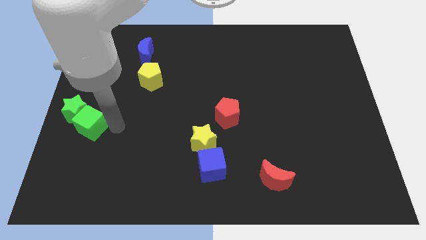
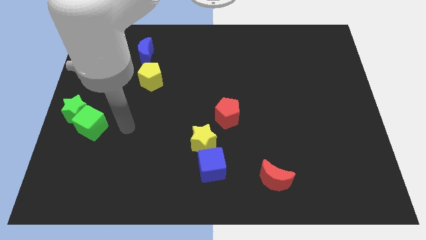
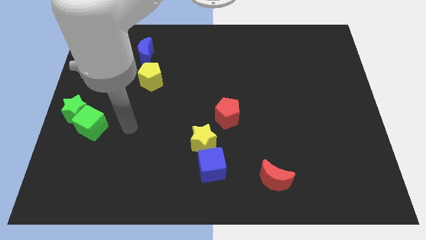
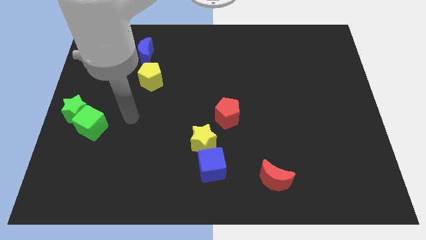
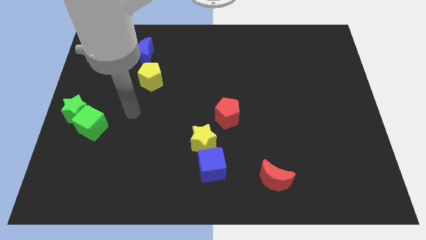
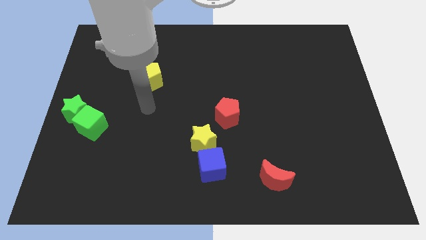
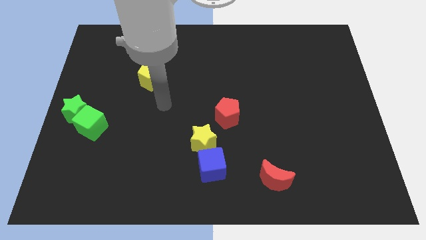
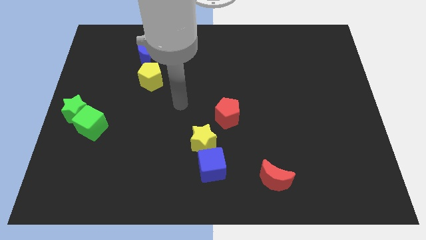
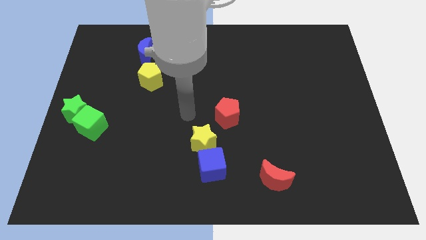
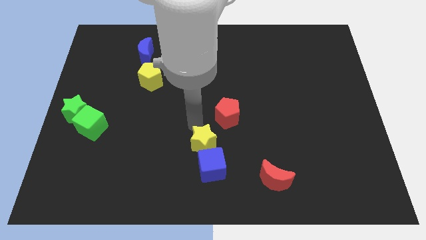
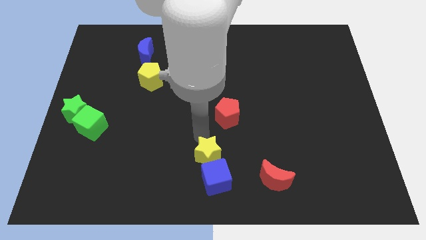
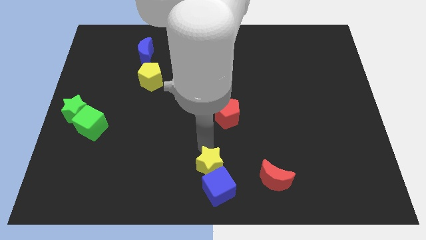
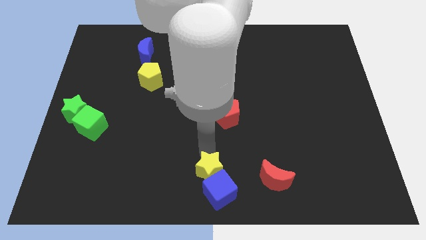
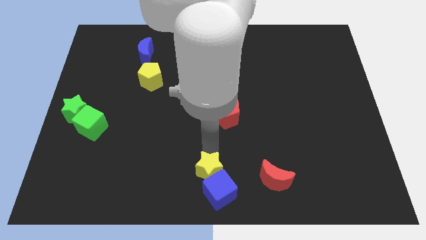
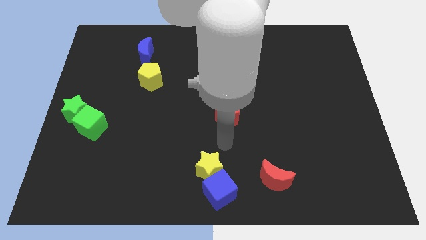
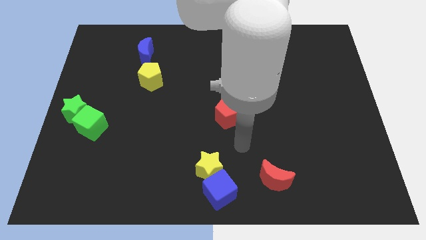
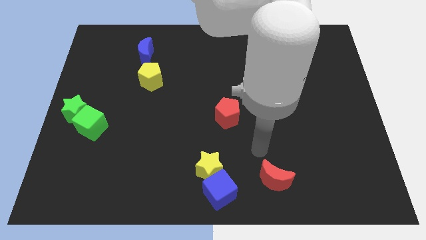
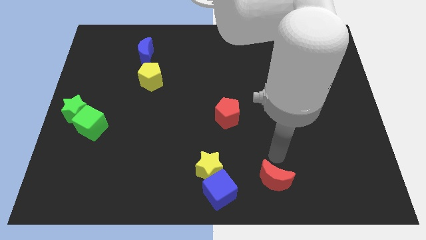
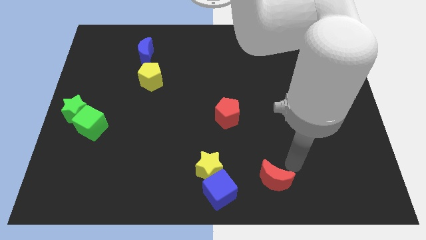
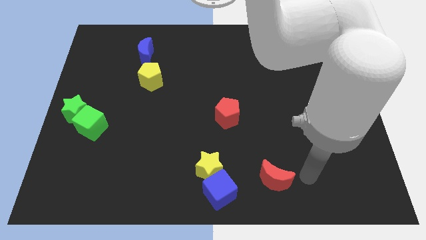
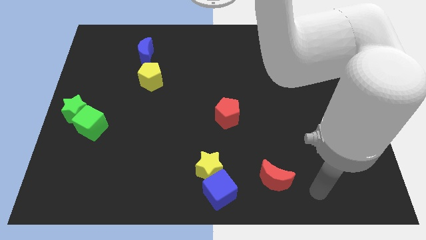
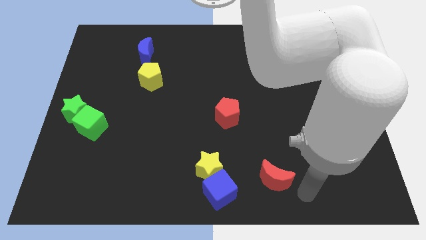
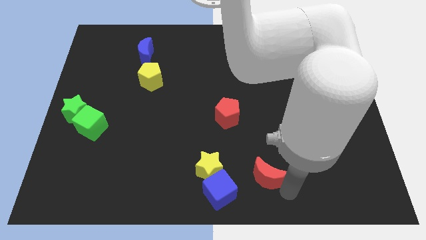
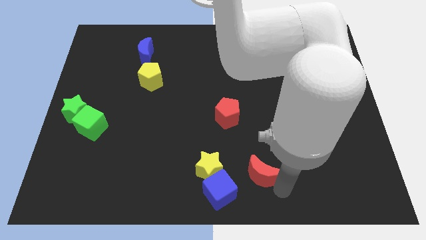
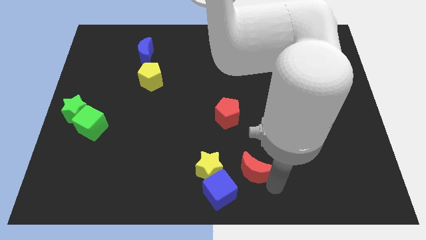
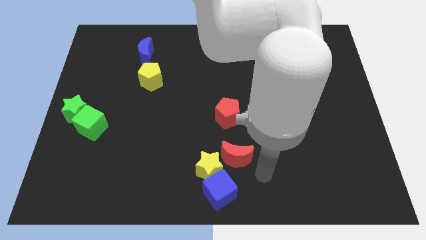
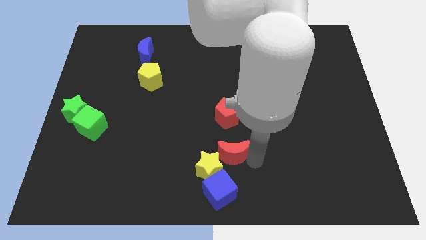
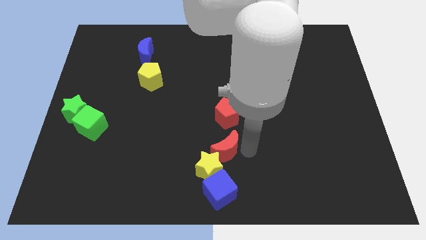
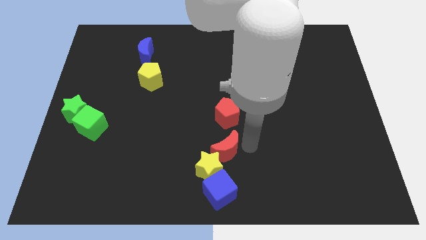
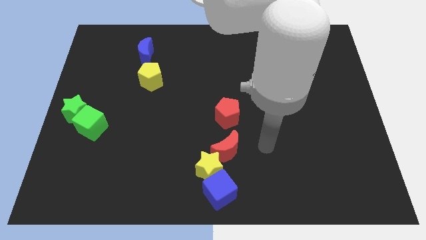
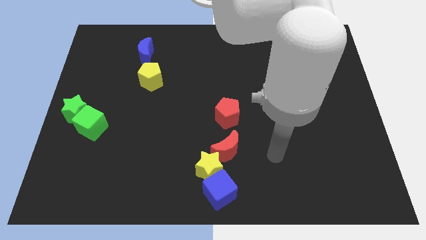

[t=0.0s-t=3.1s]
push yellow star towards bottom center move red moon in between of red pentagon yellow star

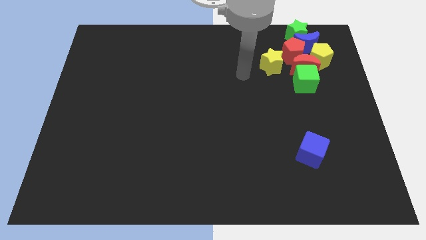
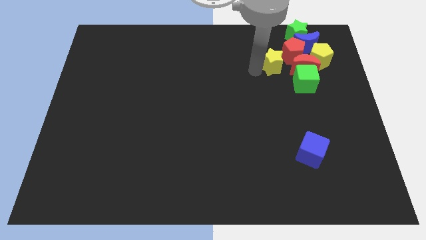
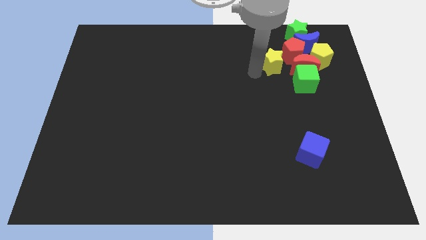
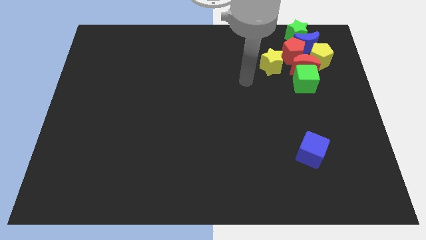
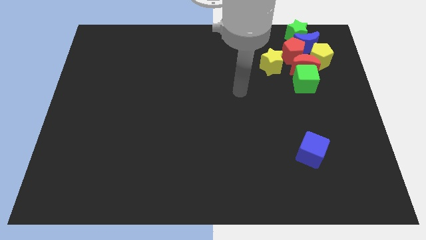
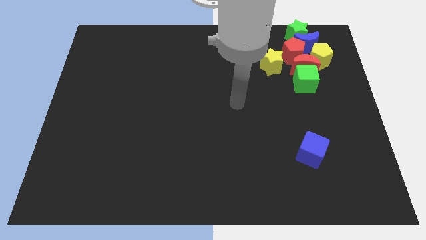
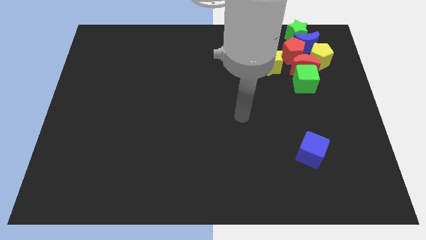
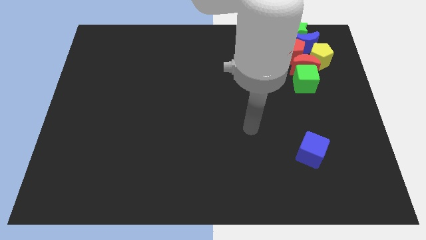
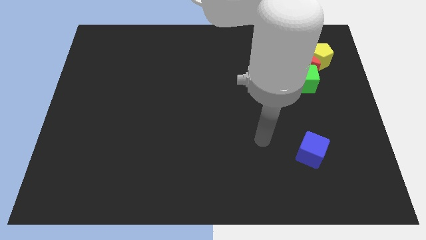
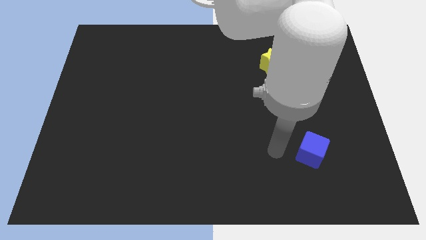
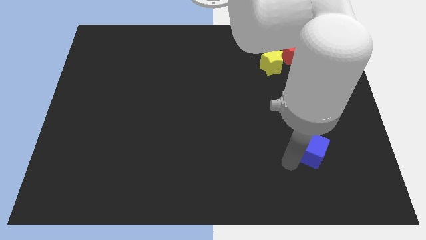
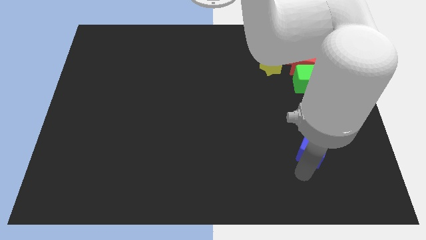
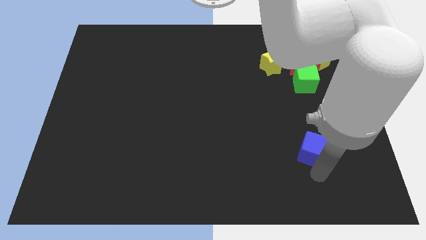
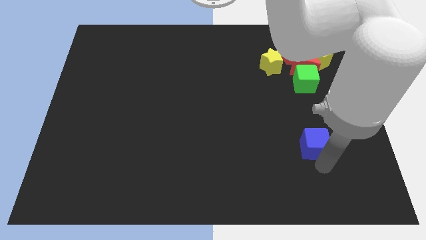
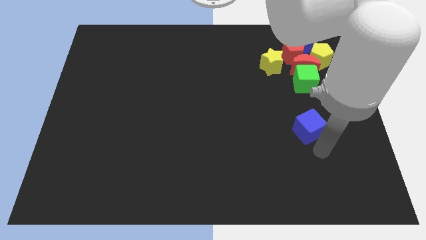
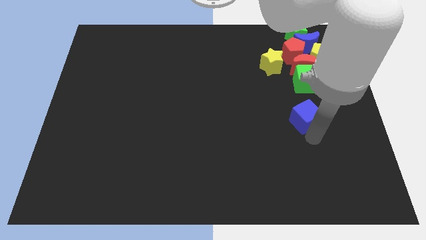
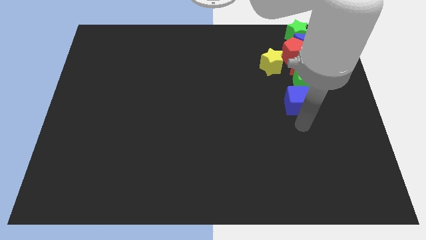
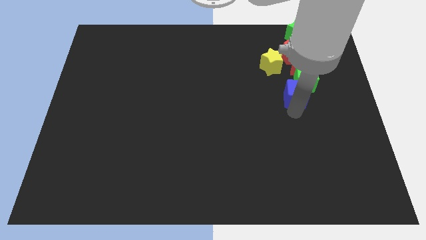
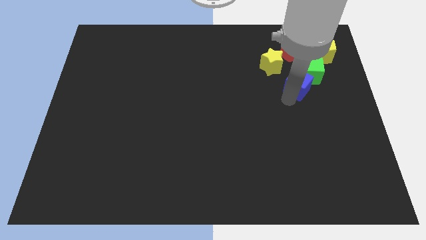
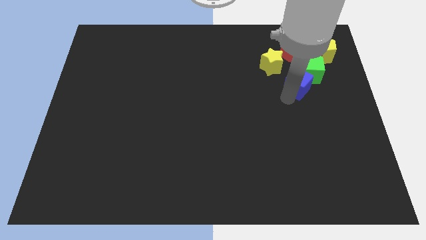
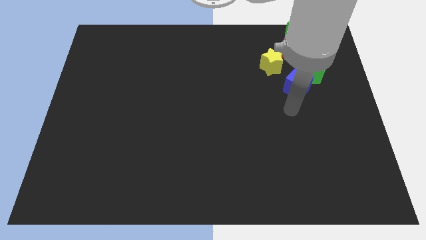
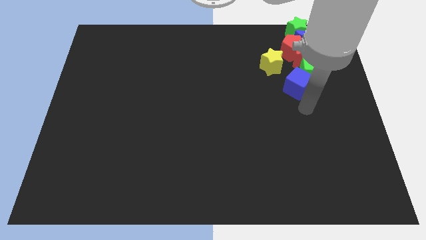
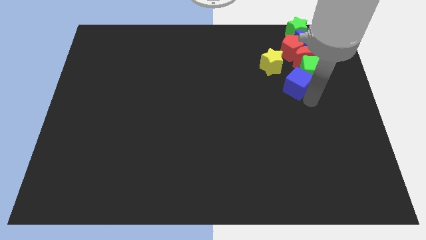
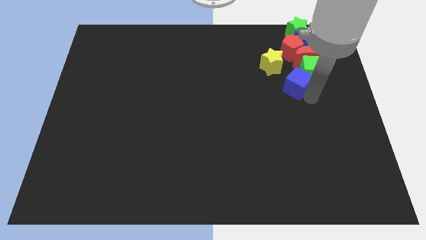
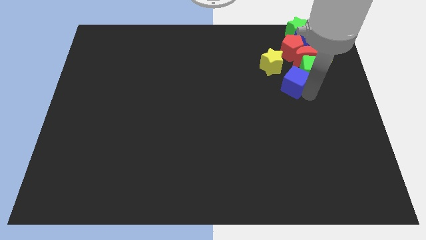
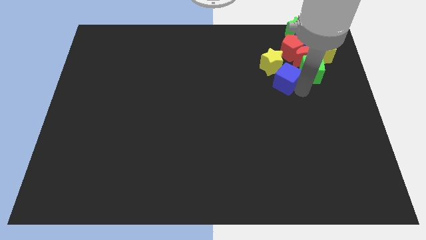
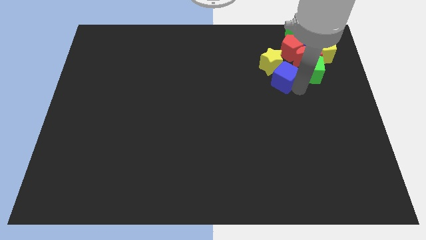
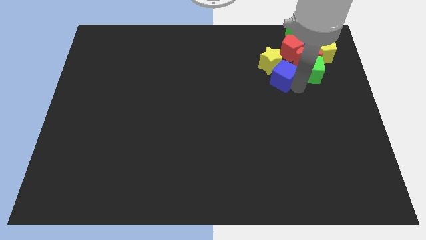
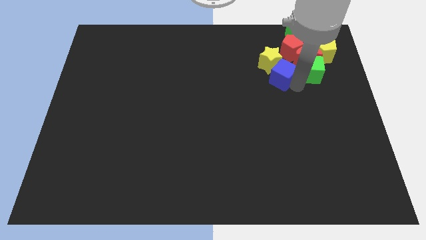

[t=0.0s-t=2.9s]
push the blue cube into the yellow star

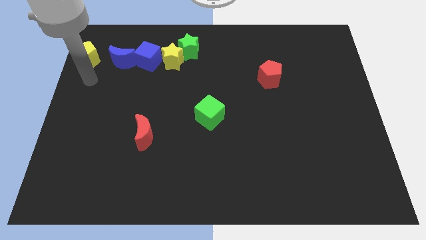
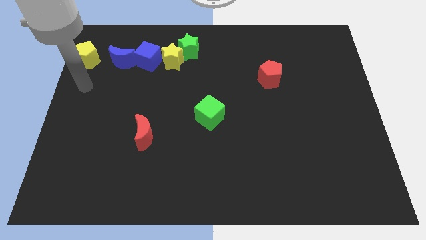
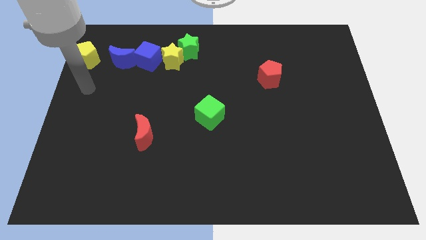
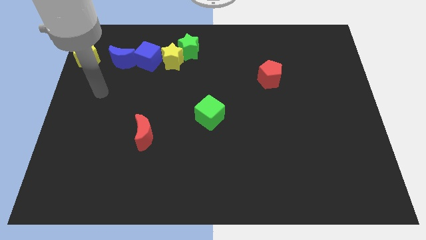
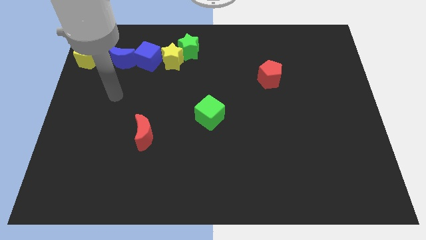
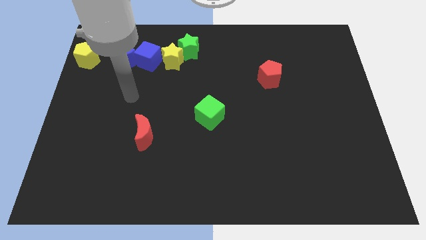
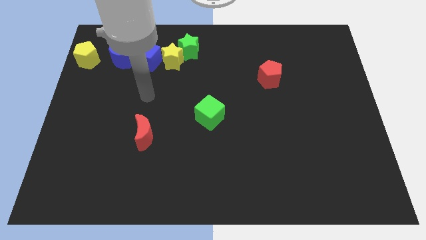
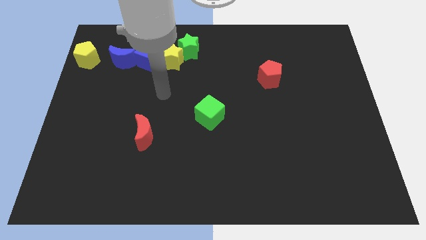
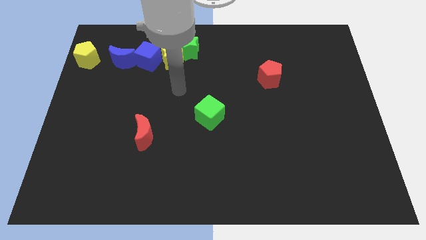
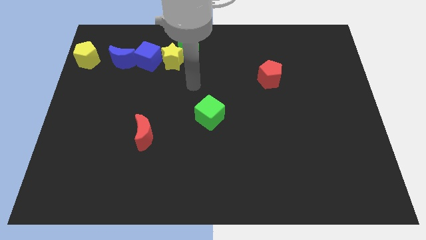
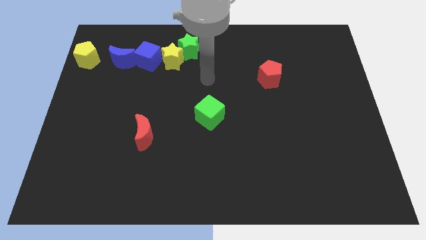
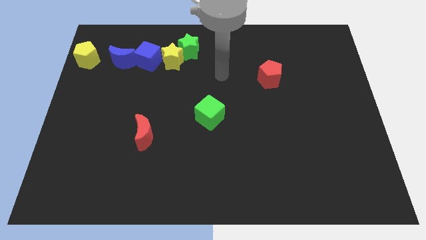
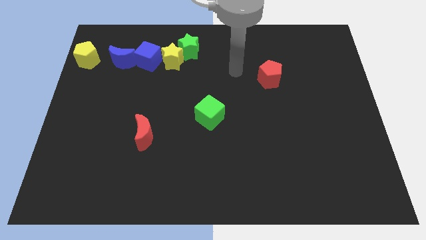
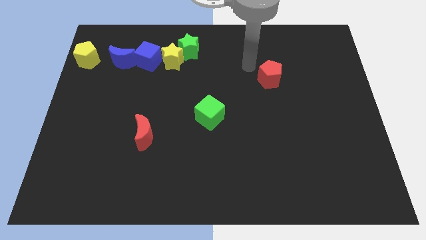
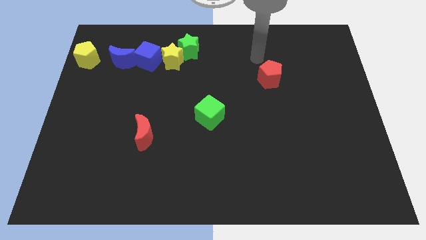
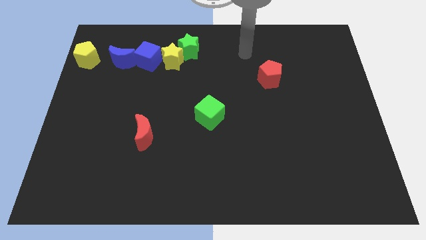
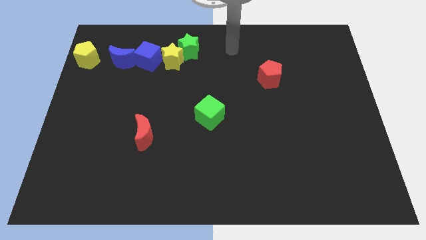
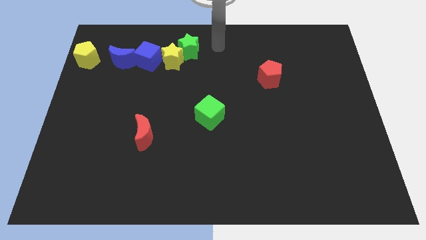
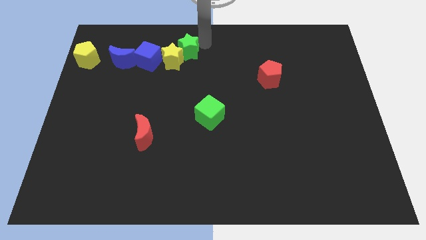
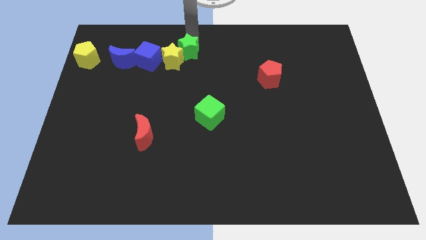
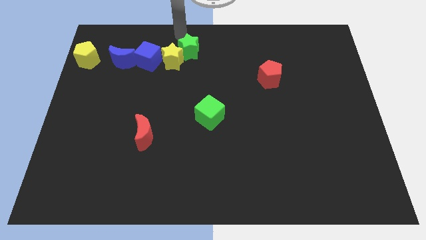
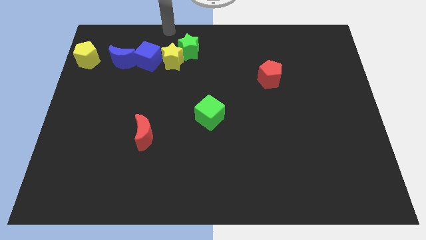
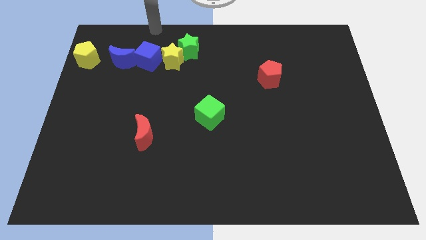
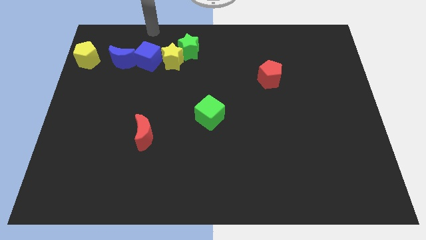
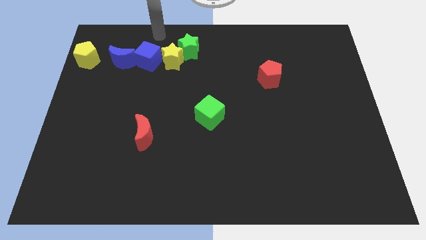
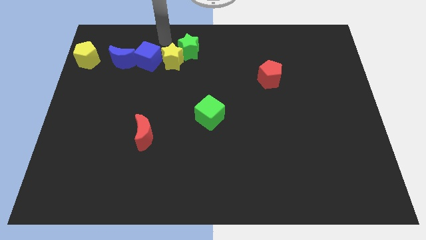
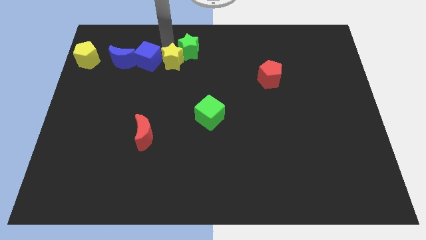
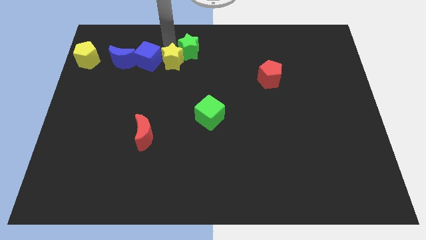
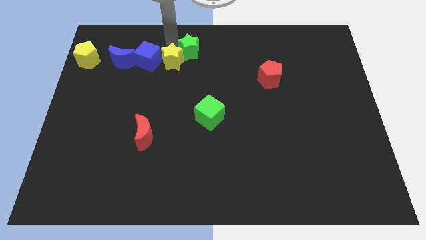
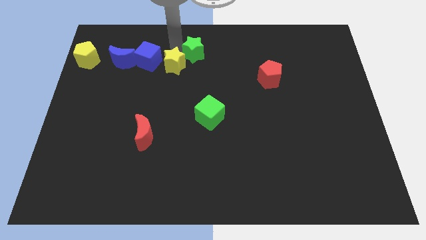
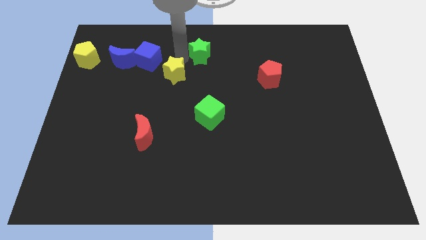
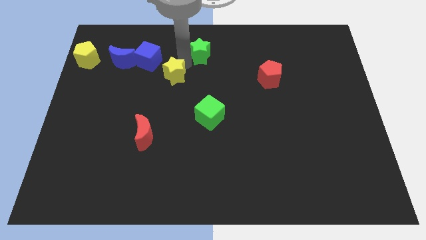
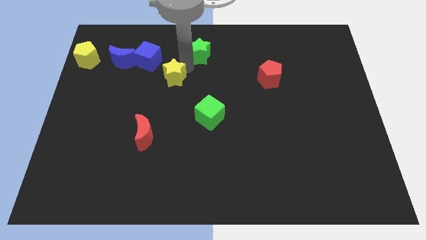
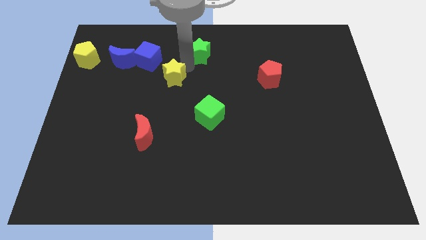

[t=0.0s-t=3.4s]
separate yellow star and green star
